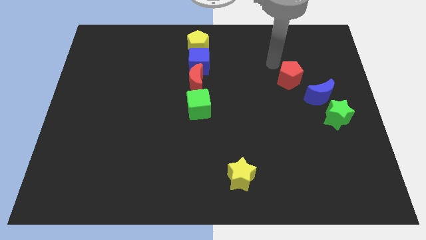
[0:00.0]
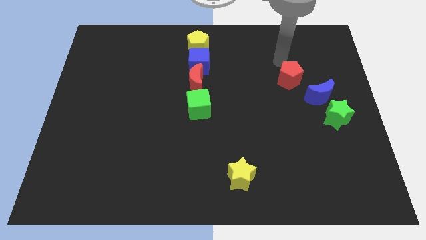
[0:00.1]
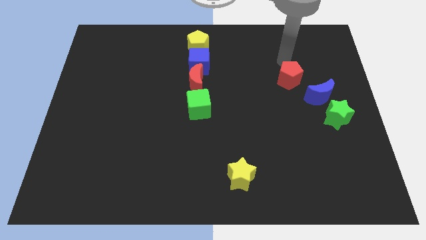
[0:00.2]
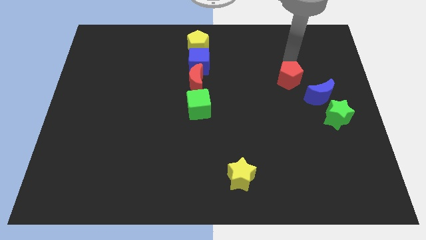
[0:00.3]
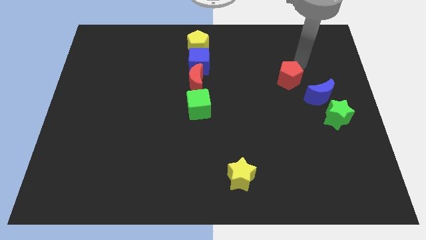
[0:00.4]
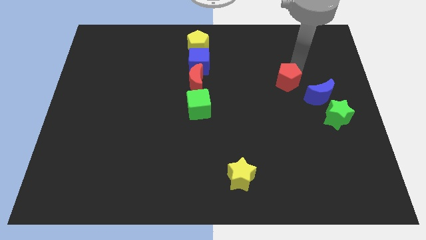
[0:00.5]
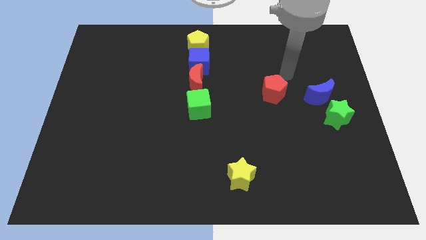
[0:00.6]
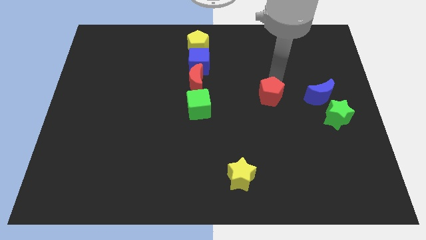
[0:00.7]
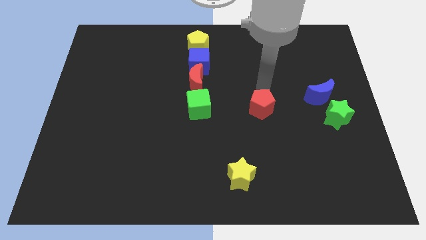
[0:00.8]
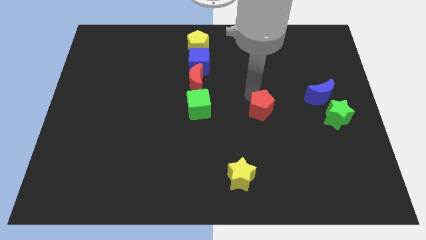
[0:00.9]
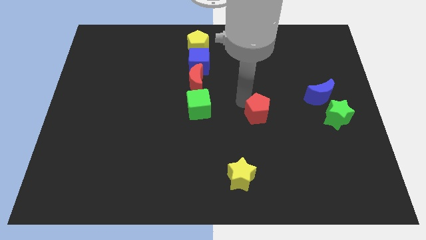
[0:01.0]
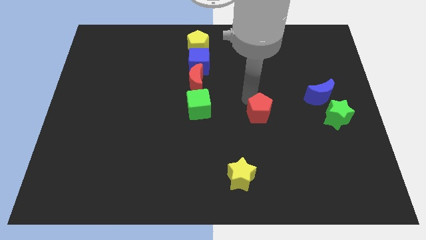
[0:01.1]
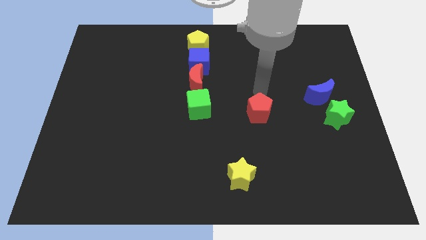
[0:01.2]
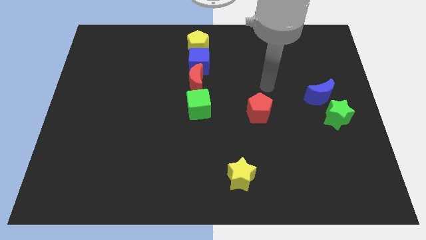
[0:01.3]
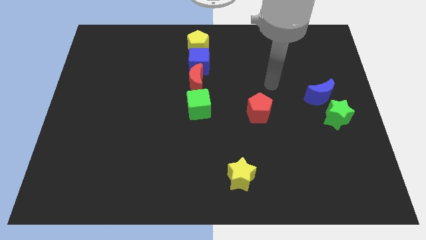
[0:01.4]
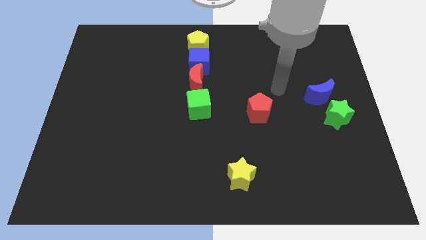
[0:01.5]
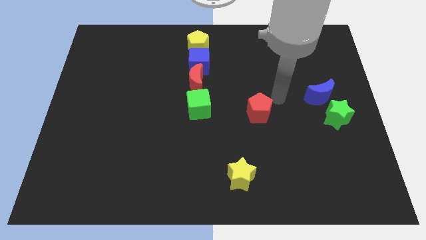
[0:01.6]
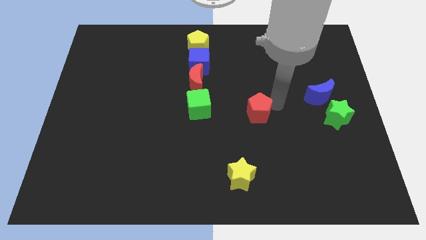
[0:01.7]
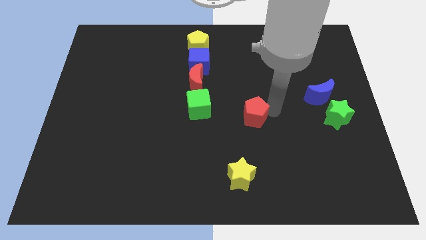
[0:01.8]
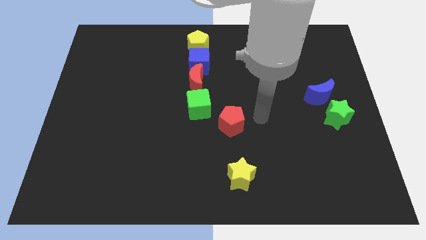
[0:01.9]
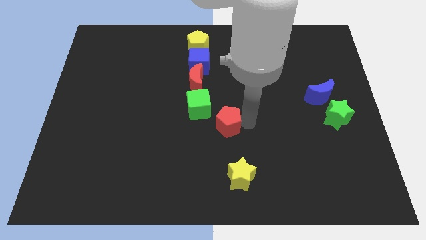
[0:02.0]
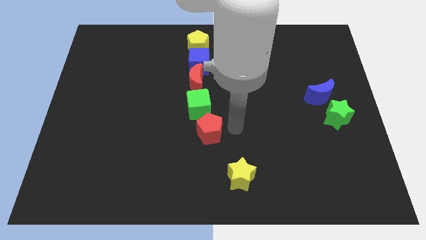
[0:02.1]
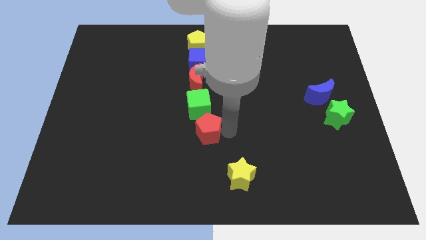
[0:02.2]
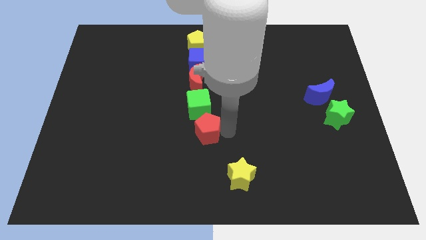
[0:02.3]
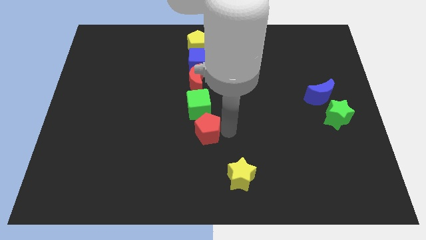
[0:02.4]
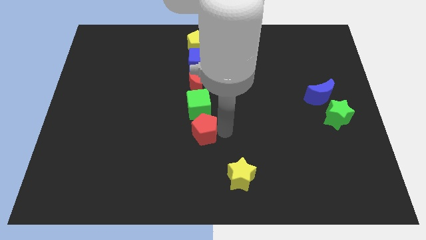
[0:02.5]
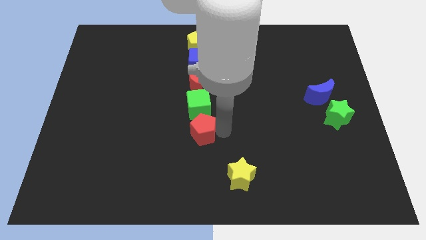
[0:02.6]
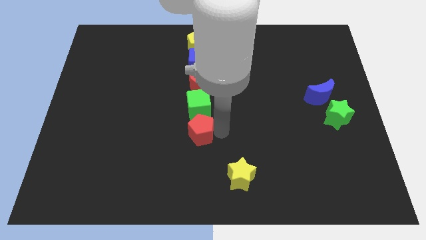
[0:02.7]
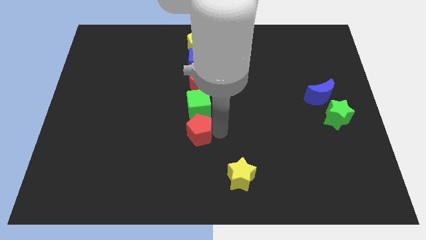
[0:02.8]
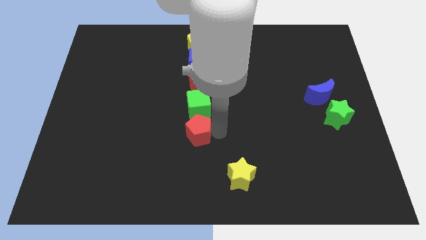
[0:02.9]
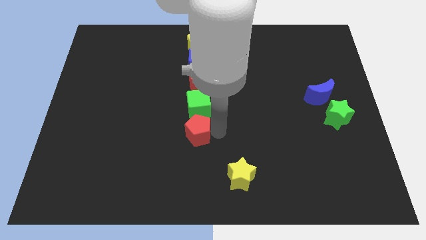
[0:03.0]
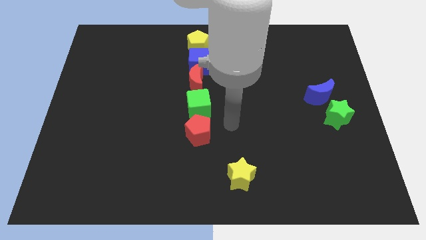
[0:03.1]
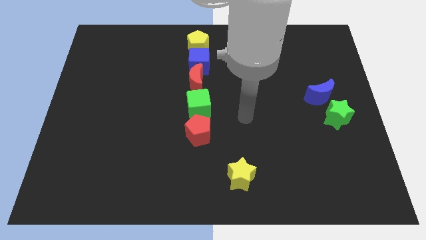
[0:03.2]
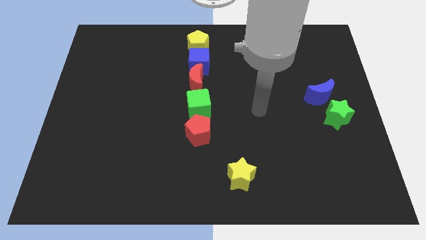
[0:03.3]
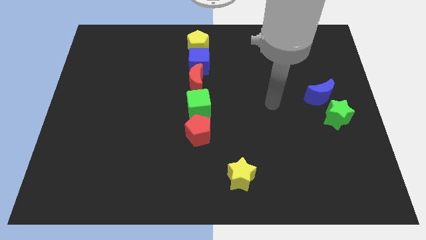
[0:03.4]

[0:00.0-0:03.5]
push the red pentagon at the center

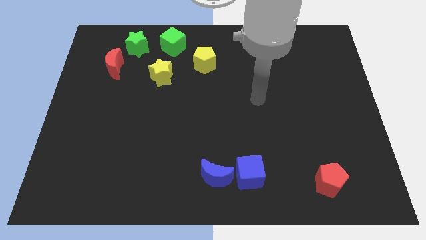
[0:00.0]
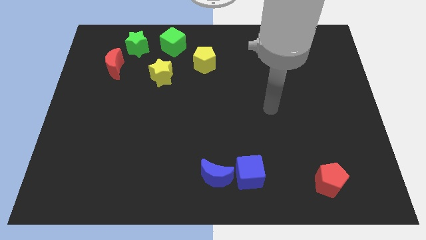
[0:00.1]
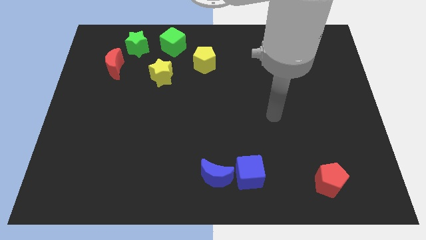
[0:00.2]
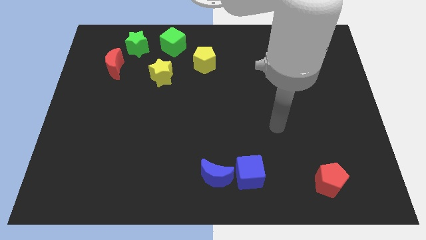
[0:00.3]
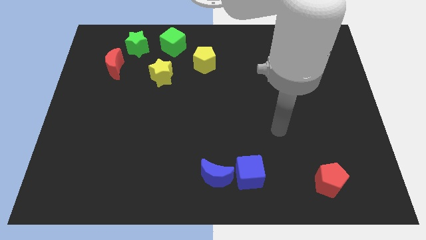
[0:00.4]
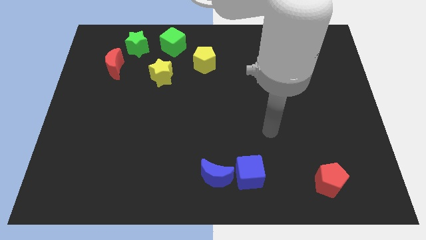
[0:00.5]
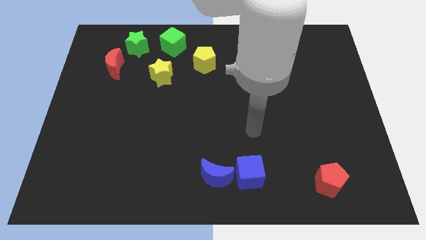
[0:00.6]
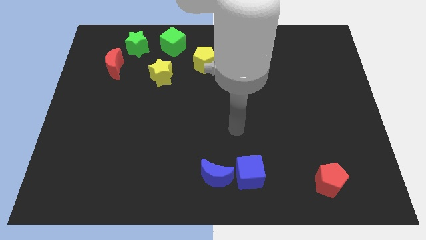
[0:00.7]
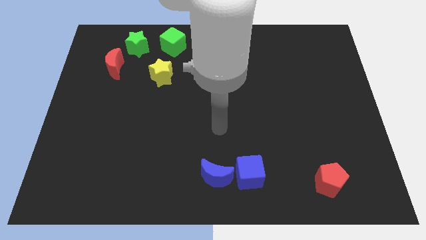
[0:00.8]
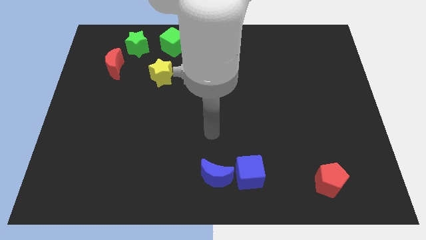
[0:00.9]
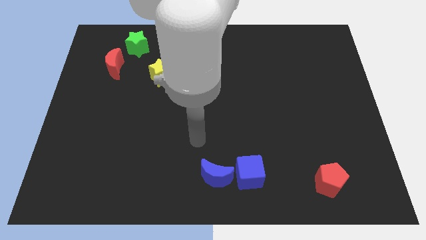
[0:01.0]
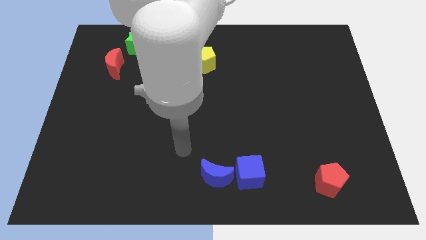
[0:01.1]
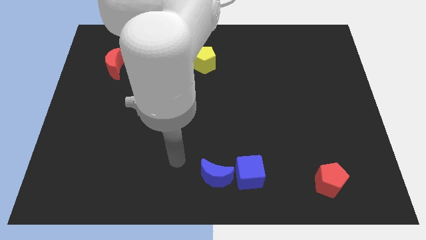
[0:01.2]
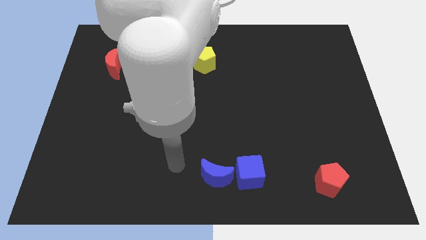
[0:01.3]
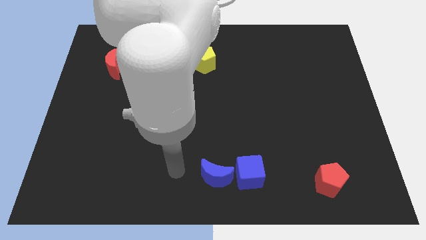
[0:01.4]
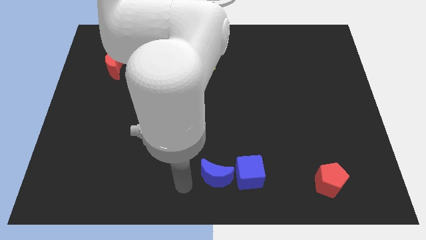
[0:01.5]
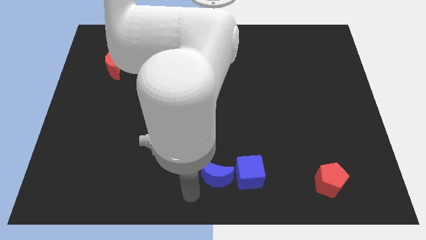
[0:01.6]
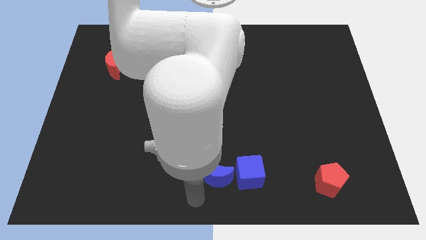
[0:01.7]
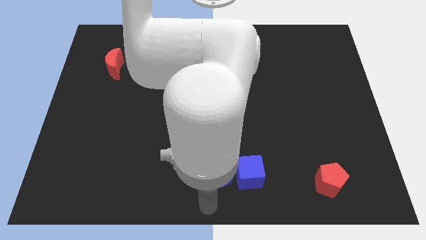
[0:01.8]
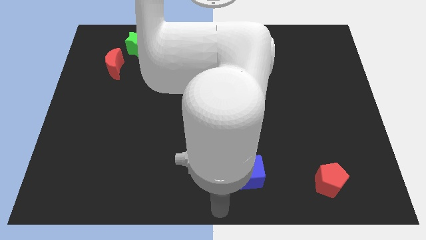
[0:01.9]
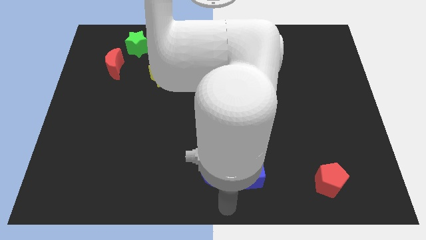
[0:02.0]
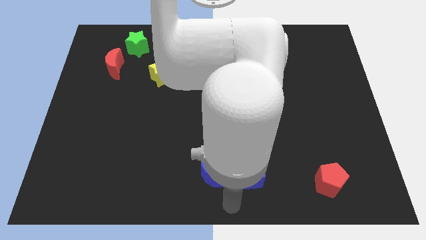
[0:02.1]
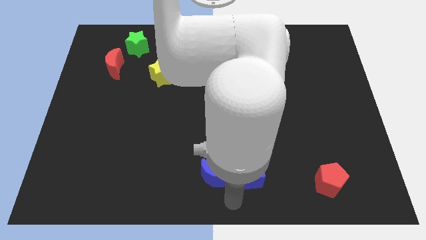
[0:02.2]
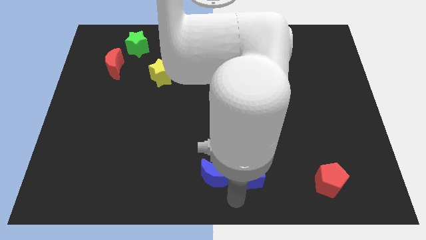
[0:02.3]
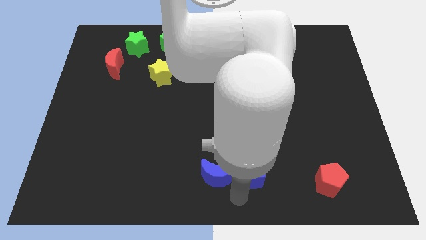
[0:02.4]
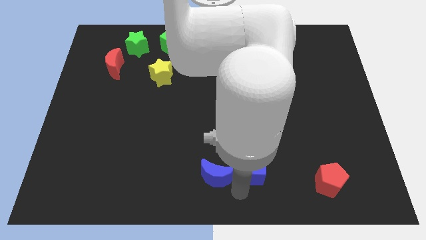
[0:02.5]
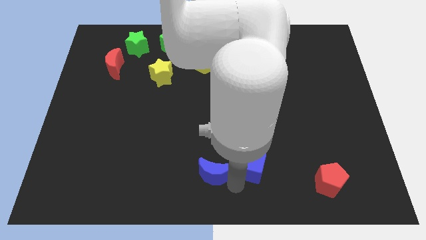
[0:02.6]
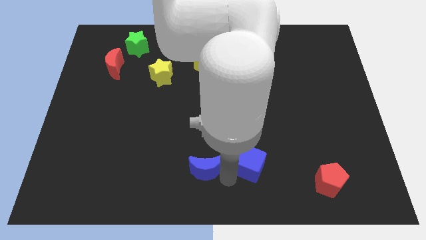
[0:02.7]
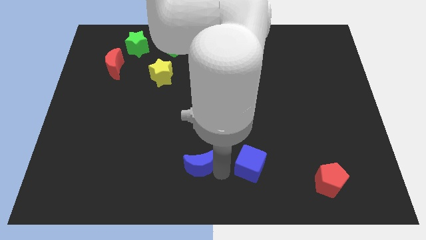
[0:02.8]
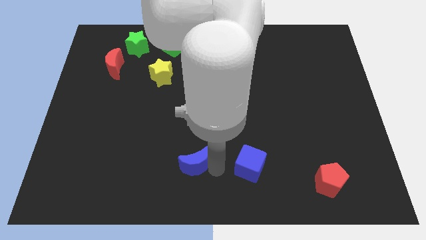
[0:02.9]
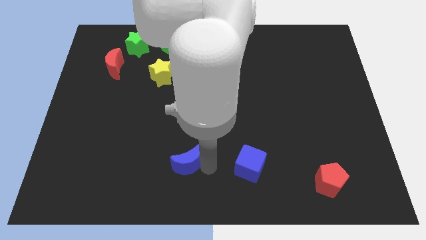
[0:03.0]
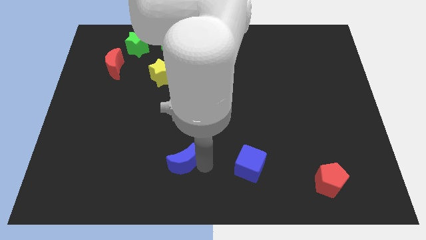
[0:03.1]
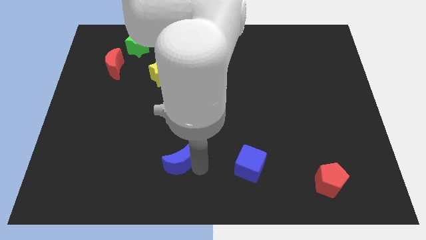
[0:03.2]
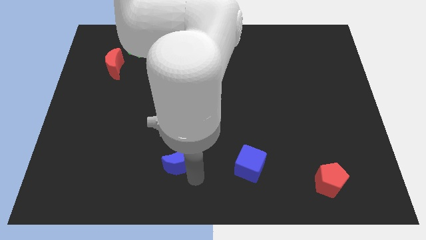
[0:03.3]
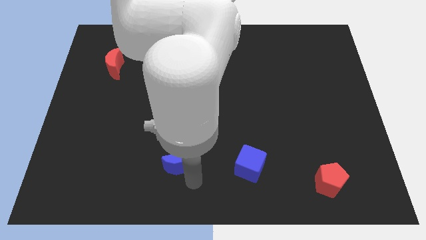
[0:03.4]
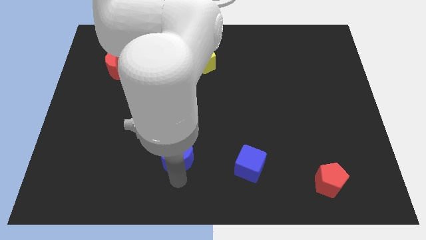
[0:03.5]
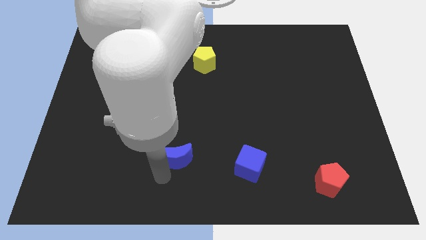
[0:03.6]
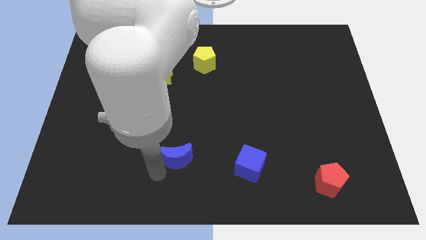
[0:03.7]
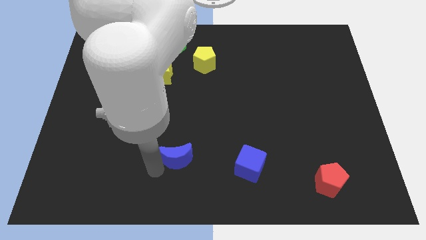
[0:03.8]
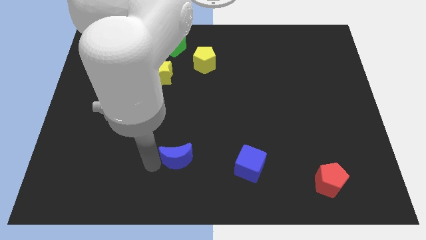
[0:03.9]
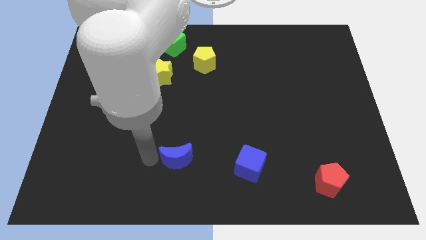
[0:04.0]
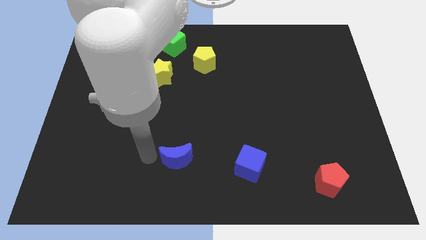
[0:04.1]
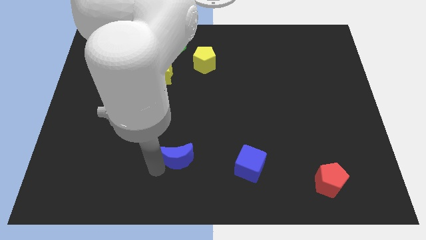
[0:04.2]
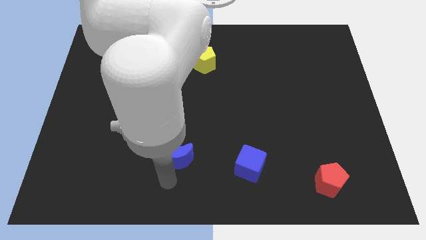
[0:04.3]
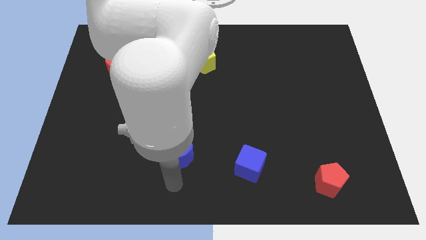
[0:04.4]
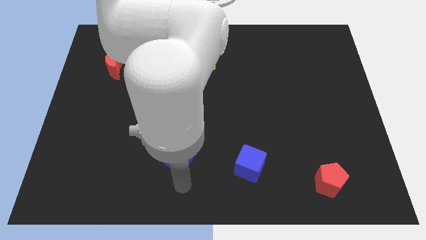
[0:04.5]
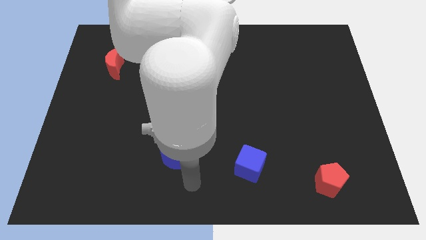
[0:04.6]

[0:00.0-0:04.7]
separate the blue cube from the blue crescent

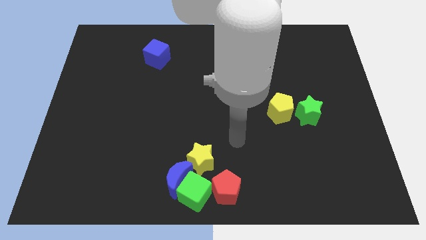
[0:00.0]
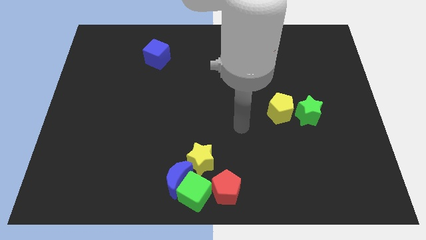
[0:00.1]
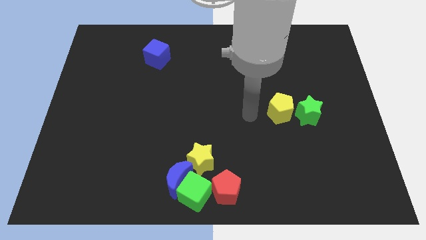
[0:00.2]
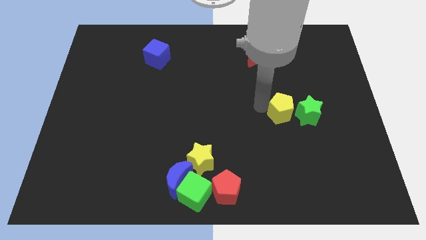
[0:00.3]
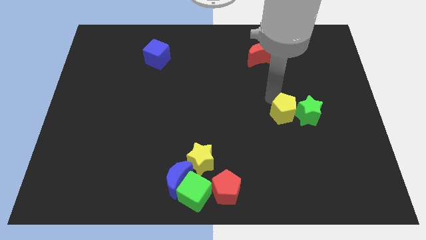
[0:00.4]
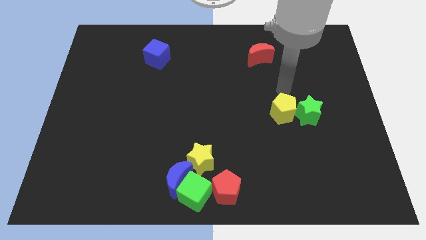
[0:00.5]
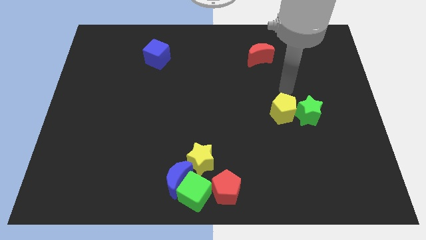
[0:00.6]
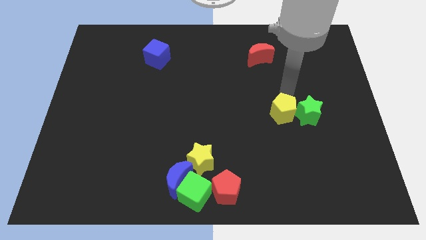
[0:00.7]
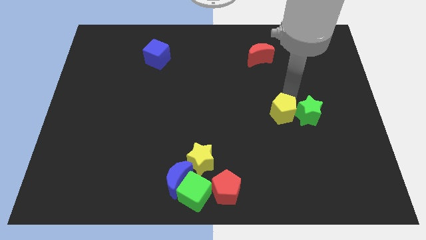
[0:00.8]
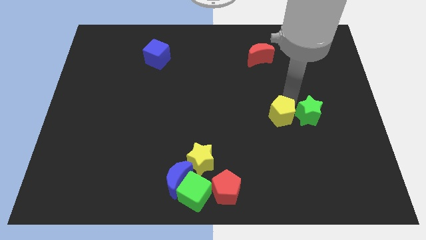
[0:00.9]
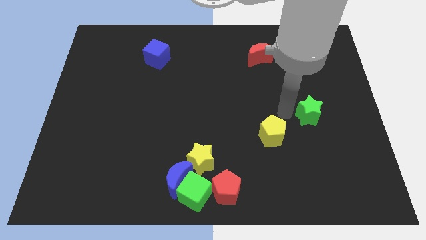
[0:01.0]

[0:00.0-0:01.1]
separate the yellow pentagon from the green star
